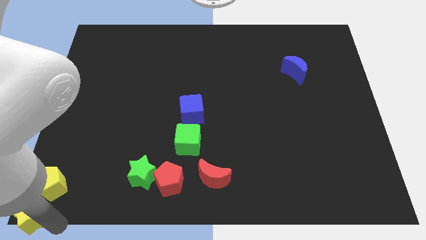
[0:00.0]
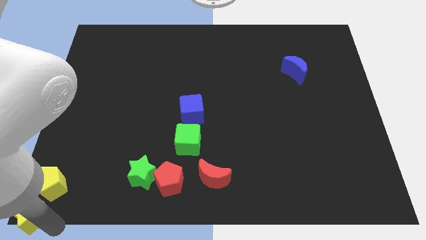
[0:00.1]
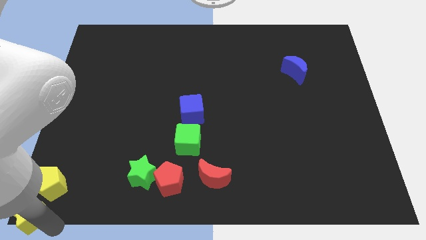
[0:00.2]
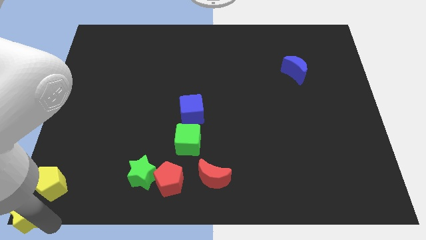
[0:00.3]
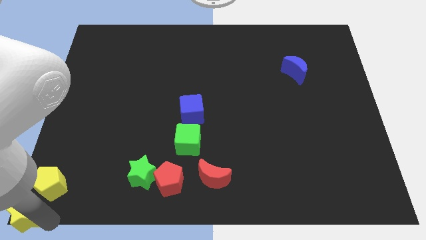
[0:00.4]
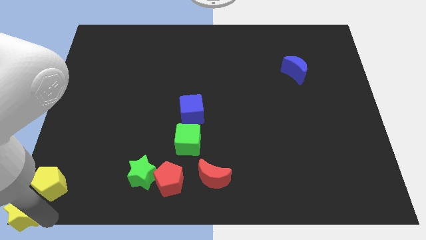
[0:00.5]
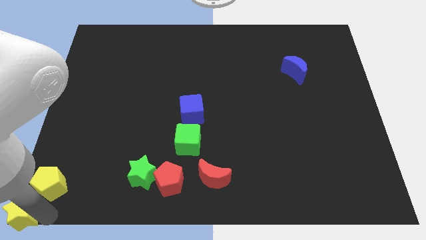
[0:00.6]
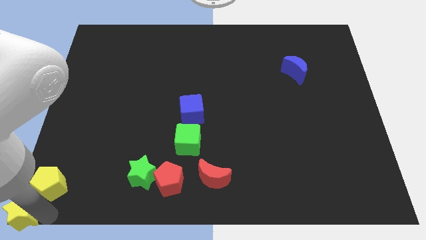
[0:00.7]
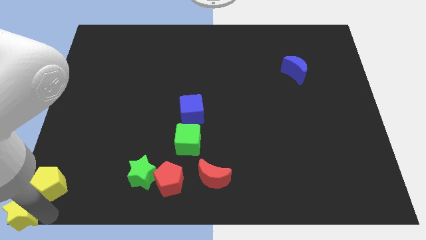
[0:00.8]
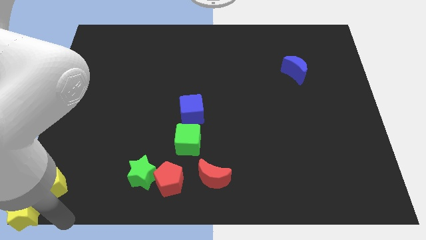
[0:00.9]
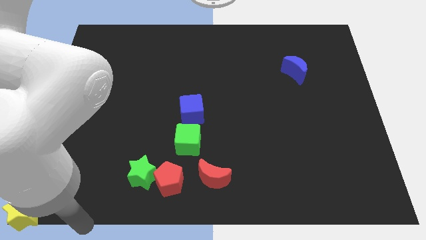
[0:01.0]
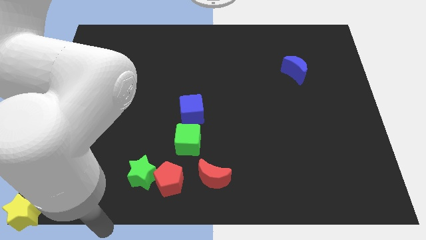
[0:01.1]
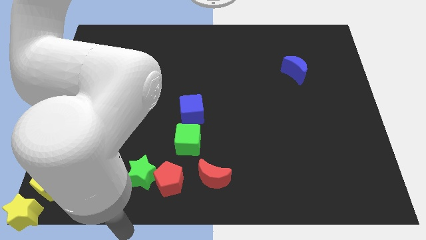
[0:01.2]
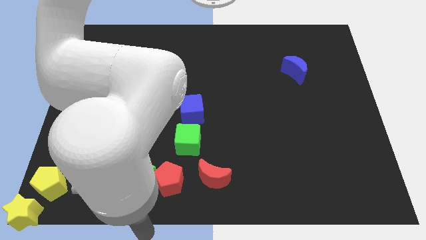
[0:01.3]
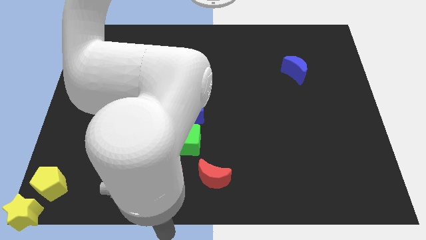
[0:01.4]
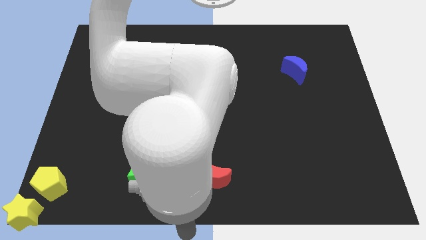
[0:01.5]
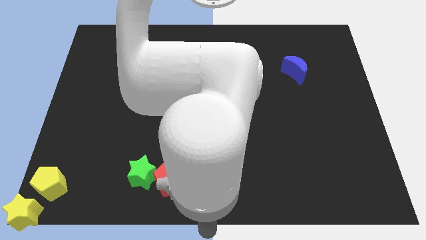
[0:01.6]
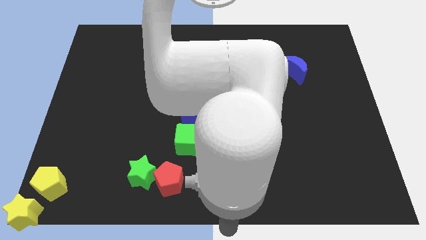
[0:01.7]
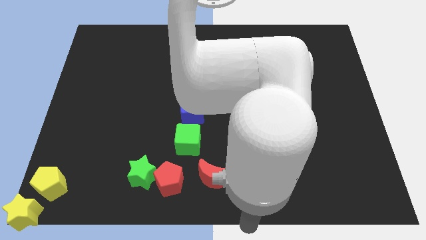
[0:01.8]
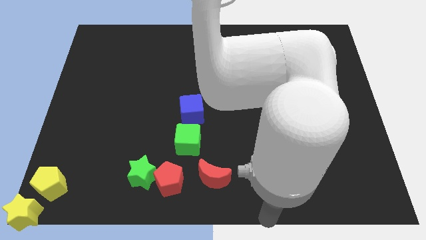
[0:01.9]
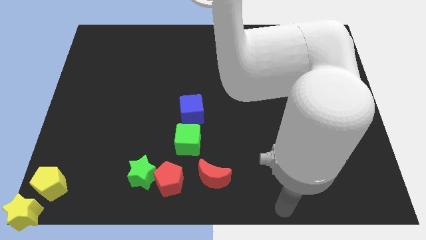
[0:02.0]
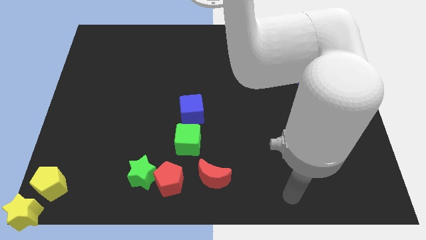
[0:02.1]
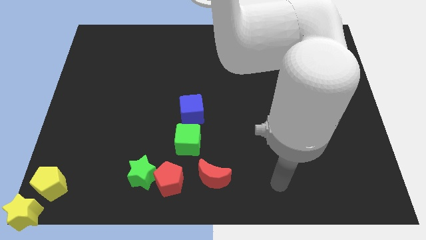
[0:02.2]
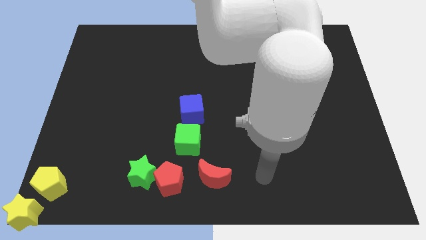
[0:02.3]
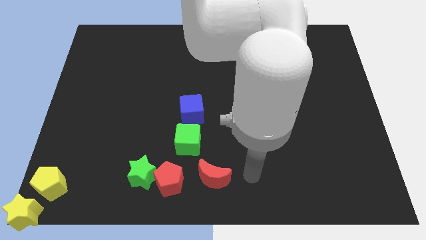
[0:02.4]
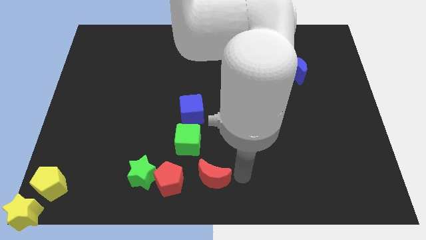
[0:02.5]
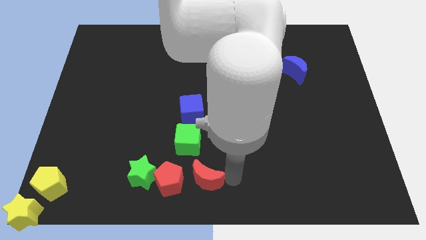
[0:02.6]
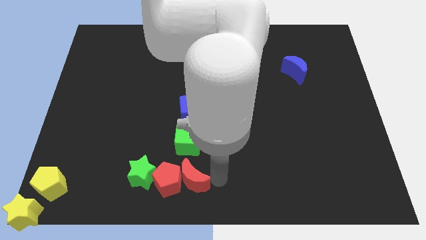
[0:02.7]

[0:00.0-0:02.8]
move the arm away from the yellow blocks

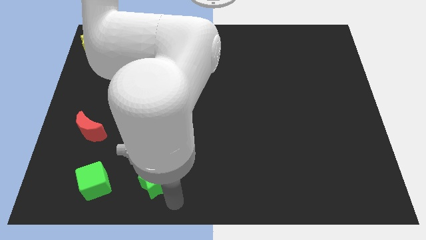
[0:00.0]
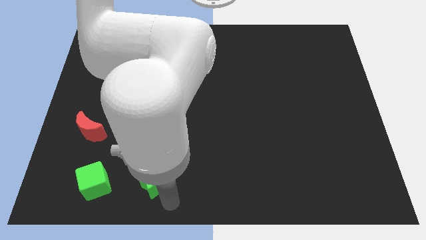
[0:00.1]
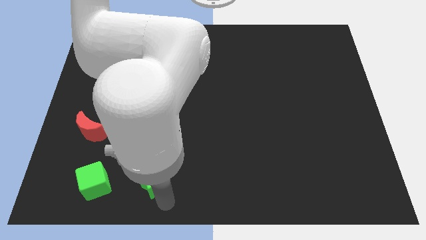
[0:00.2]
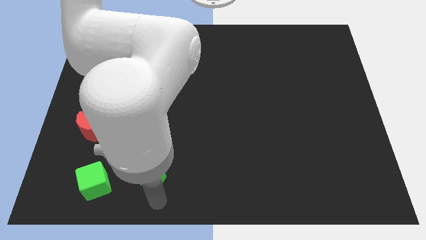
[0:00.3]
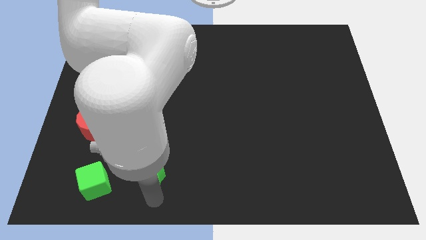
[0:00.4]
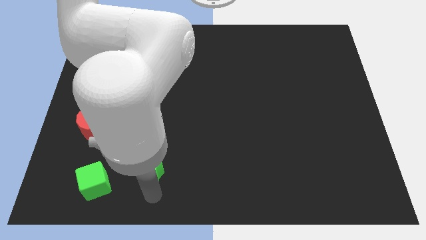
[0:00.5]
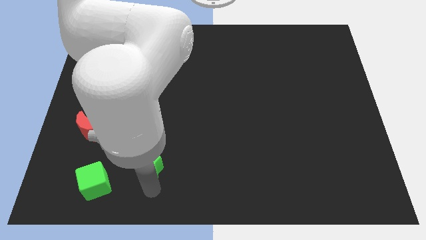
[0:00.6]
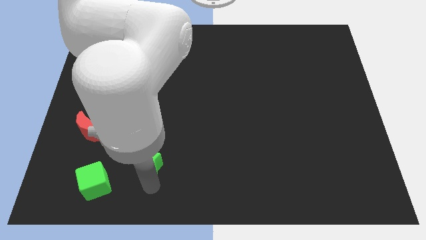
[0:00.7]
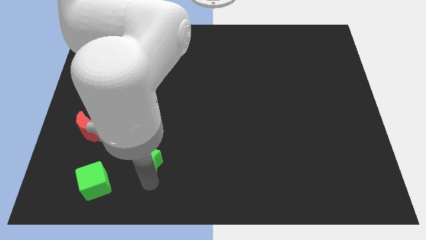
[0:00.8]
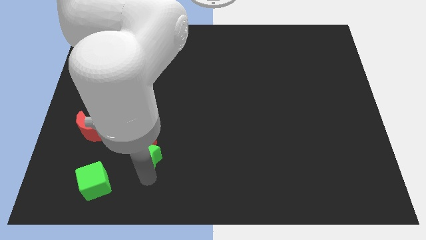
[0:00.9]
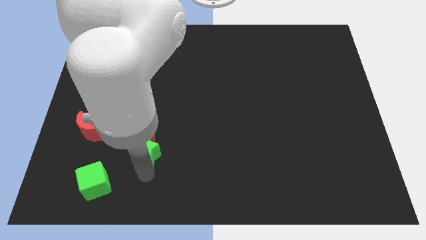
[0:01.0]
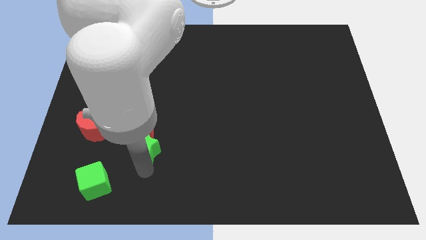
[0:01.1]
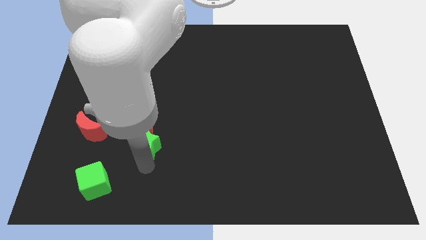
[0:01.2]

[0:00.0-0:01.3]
move the green star into the red pentagon

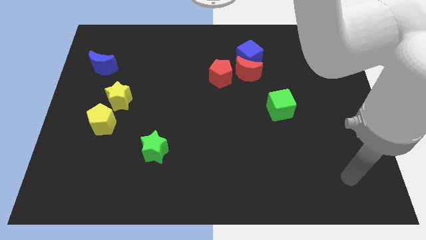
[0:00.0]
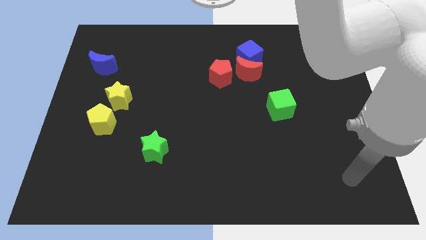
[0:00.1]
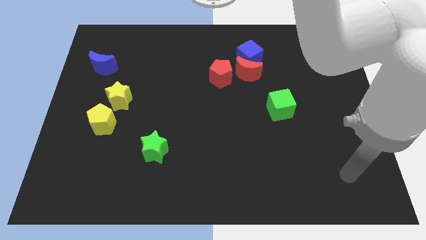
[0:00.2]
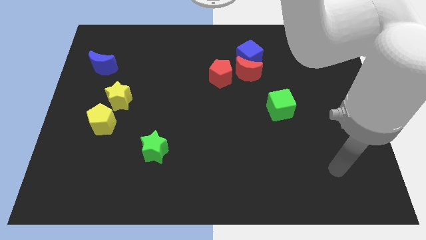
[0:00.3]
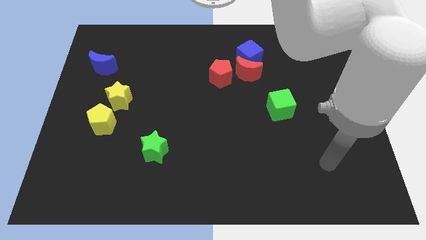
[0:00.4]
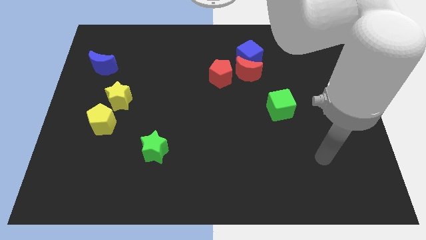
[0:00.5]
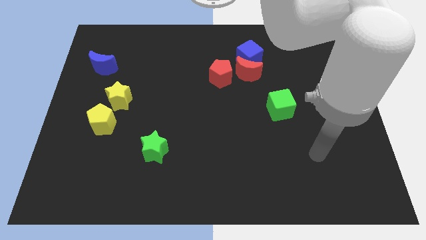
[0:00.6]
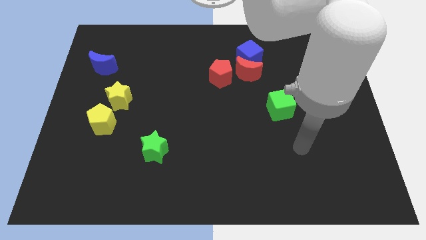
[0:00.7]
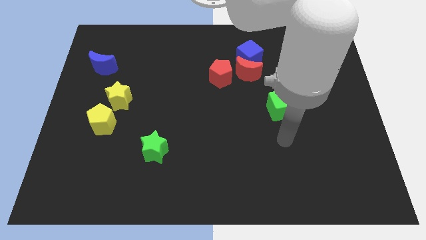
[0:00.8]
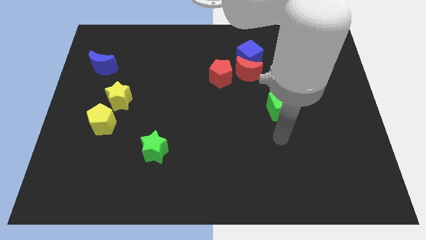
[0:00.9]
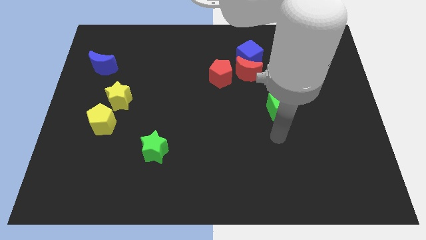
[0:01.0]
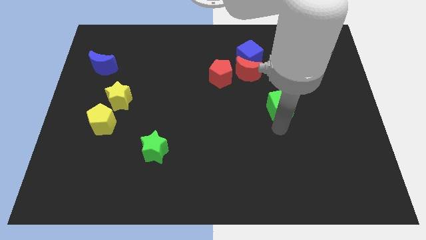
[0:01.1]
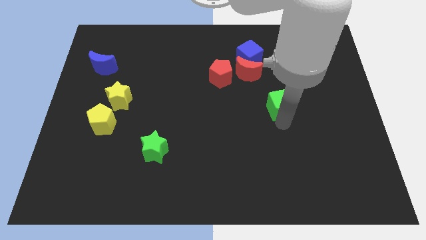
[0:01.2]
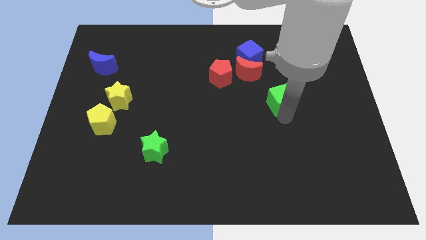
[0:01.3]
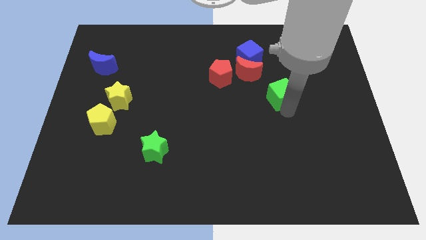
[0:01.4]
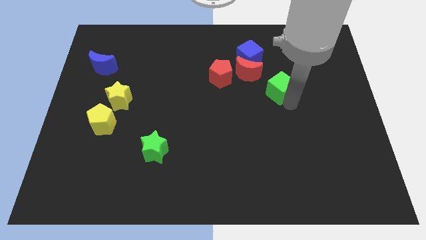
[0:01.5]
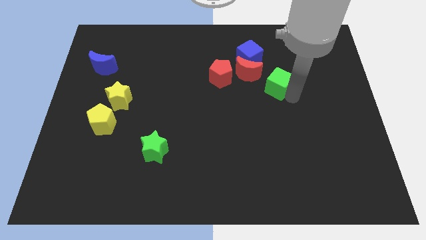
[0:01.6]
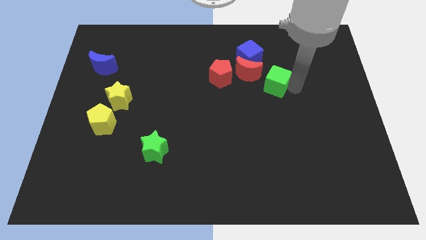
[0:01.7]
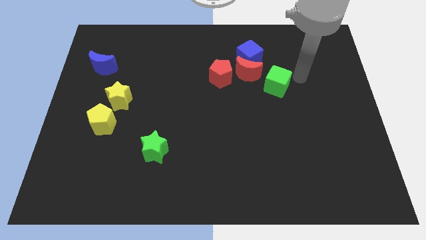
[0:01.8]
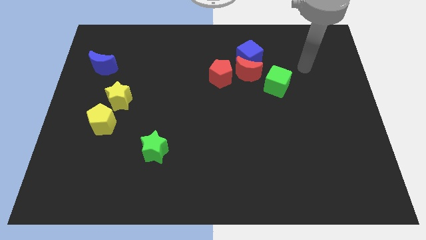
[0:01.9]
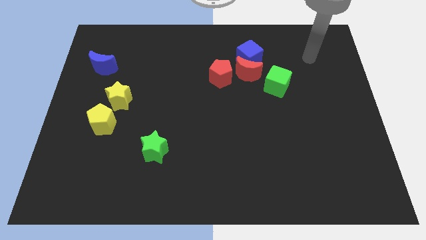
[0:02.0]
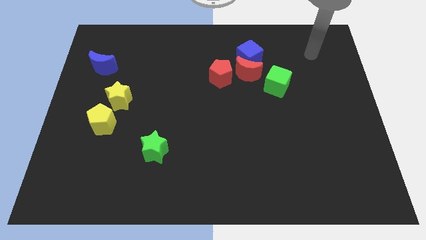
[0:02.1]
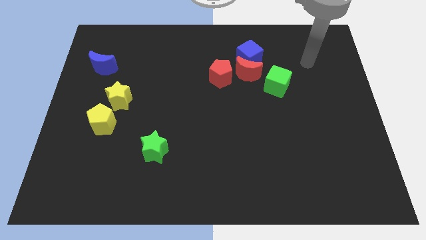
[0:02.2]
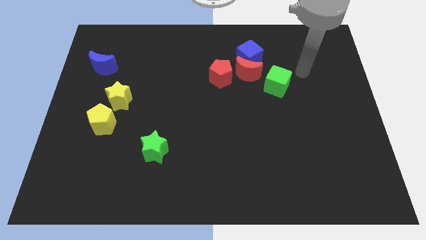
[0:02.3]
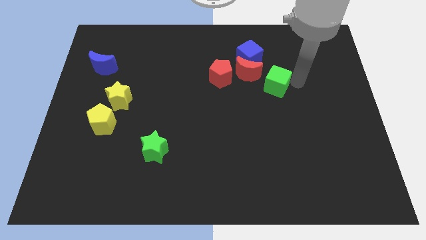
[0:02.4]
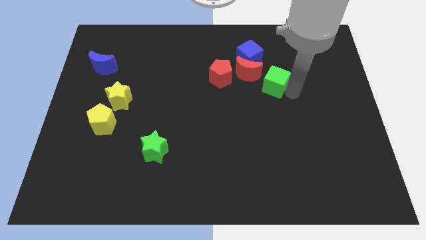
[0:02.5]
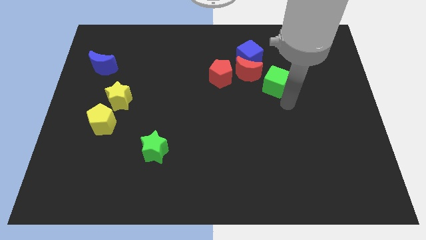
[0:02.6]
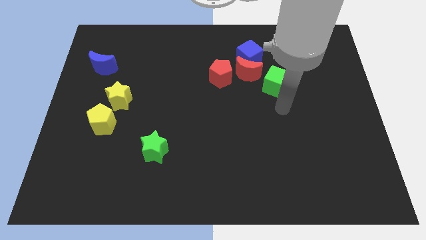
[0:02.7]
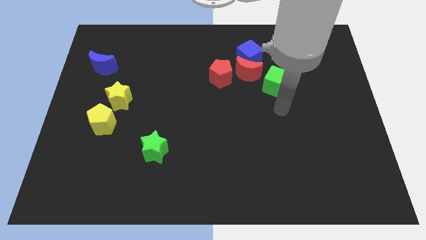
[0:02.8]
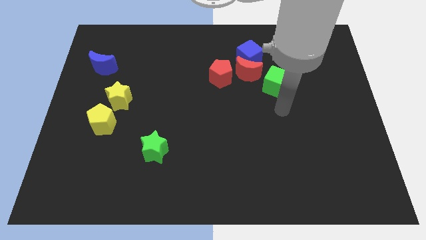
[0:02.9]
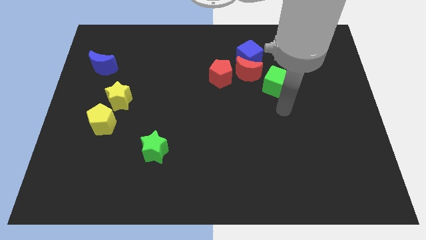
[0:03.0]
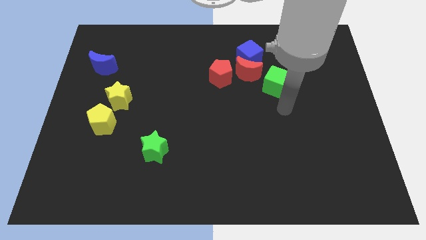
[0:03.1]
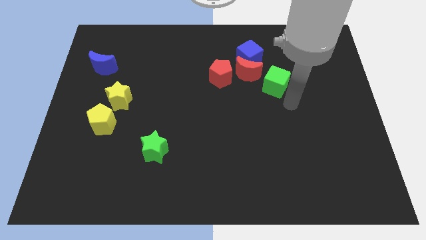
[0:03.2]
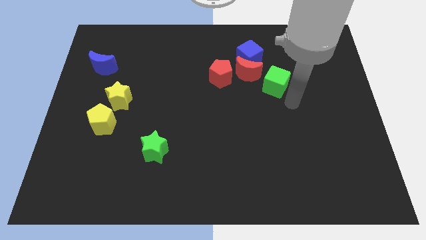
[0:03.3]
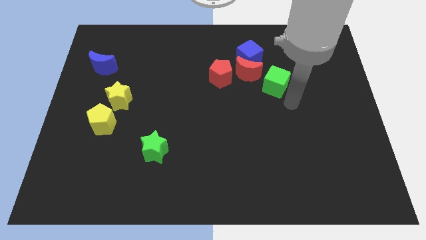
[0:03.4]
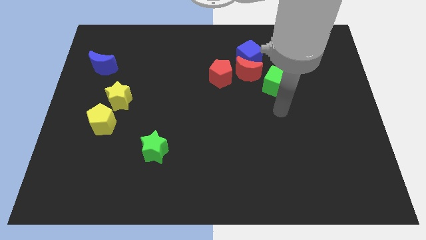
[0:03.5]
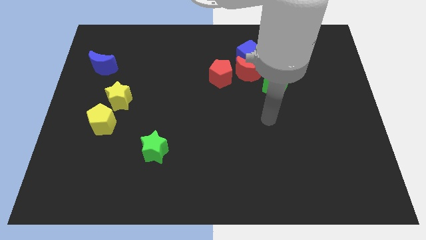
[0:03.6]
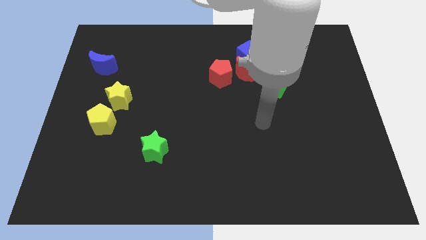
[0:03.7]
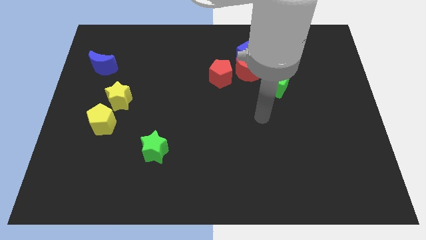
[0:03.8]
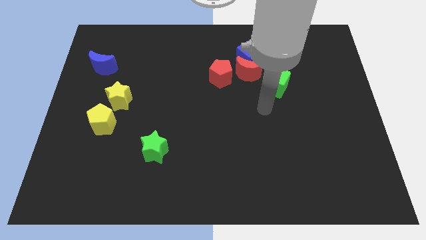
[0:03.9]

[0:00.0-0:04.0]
move the green cube to the bottom right of red moon

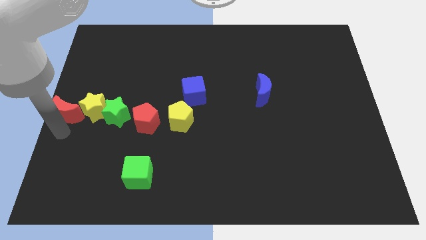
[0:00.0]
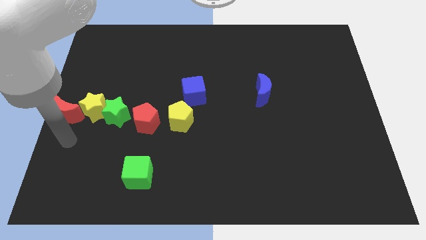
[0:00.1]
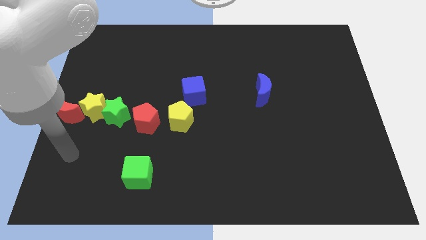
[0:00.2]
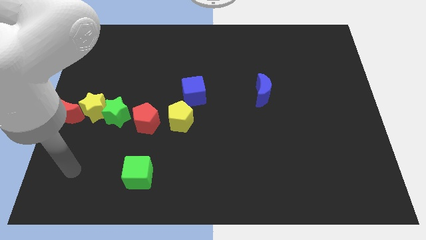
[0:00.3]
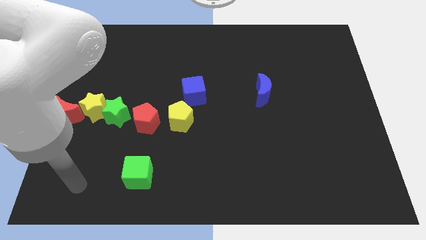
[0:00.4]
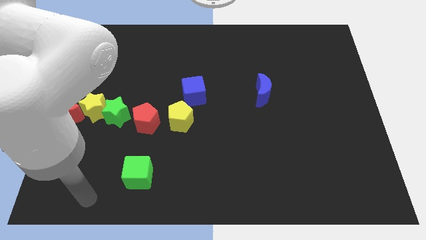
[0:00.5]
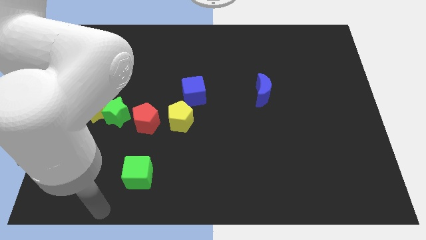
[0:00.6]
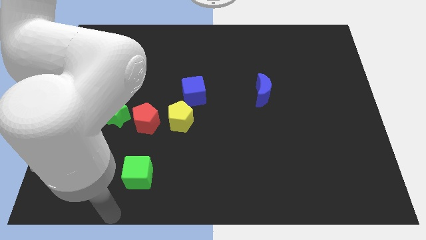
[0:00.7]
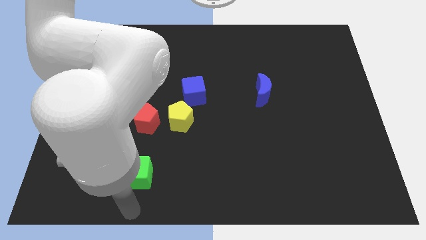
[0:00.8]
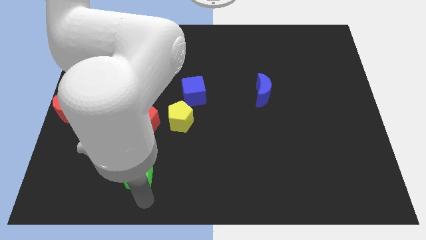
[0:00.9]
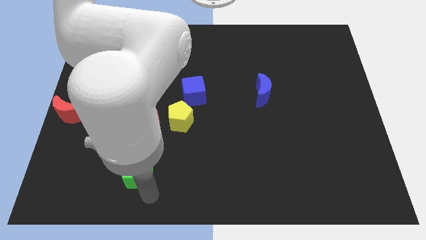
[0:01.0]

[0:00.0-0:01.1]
drag your arm to the bottom center
